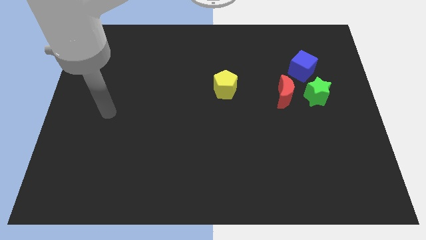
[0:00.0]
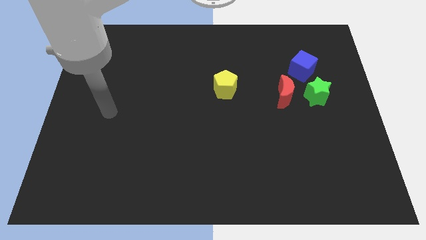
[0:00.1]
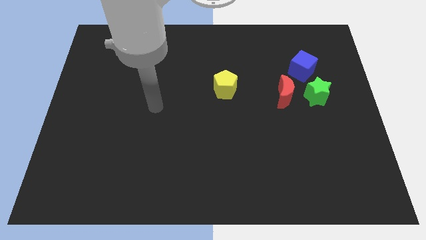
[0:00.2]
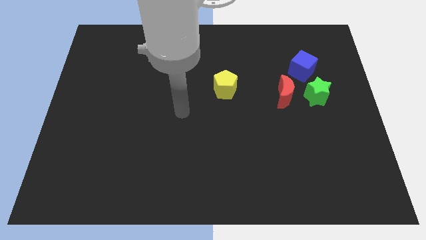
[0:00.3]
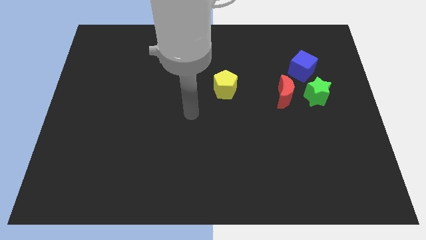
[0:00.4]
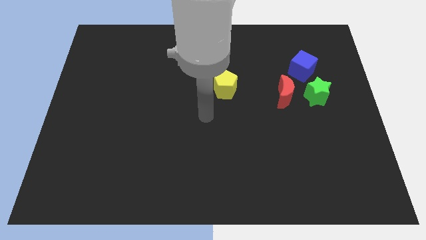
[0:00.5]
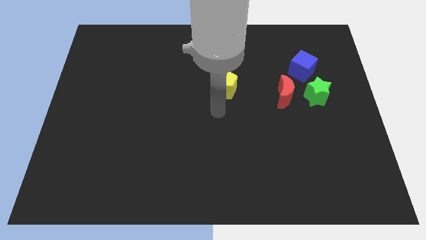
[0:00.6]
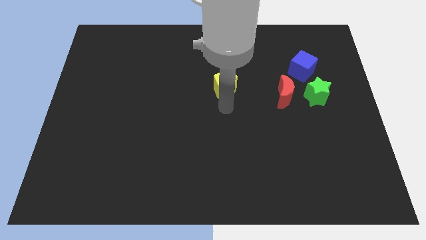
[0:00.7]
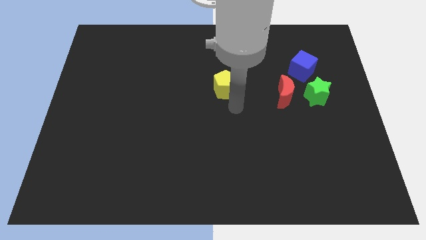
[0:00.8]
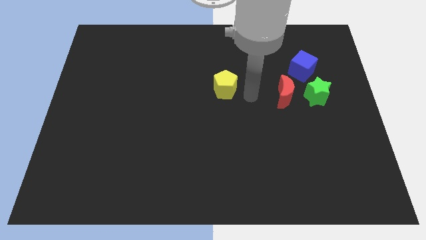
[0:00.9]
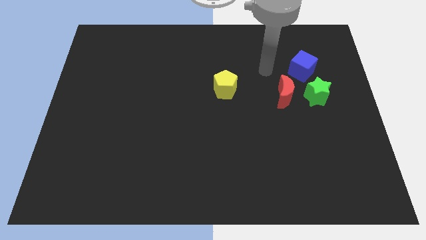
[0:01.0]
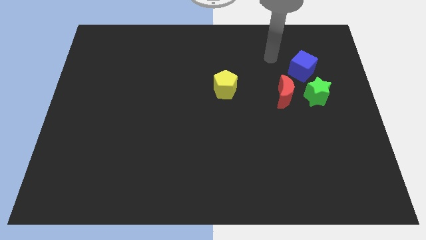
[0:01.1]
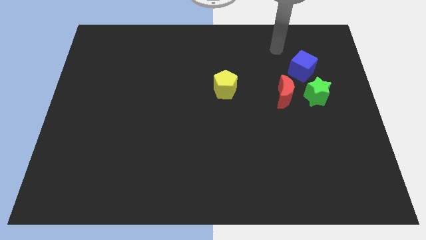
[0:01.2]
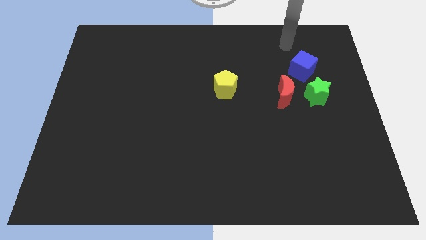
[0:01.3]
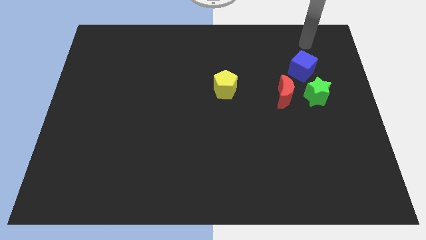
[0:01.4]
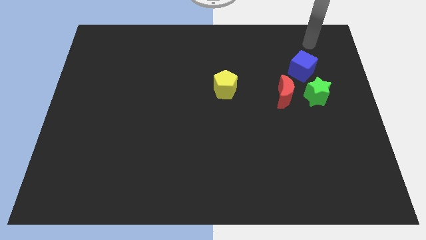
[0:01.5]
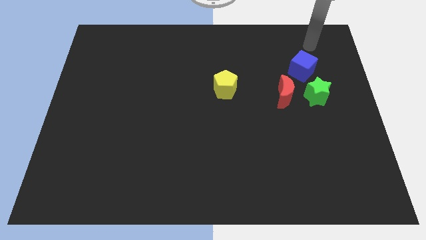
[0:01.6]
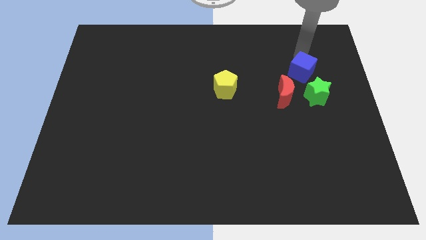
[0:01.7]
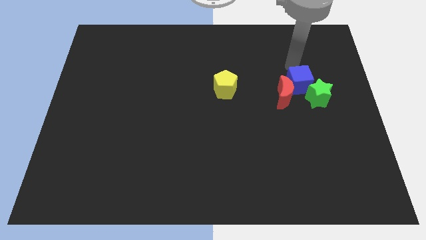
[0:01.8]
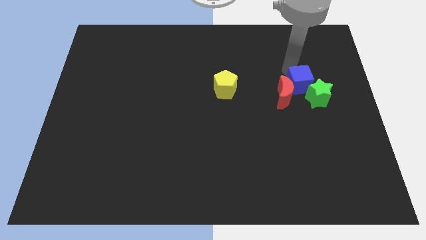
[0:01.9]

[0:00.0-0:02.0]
put the cube to the red moon

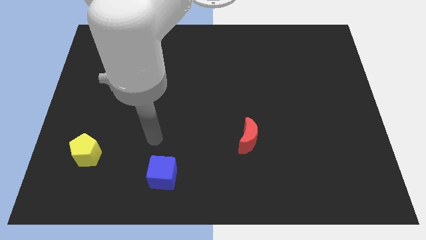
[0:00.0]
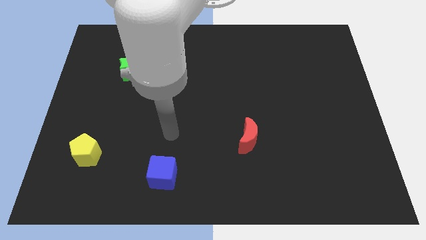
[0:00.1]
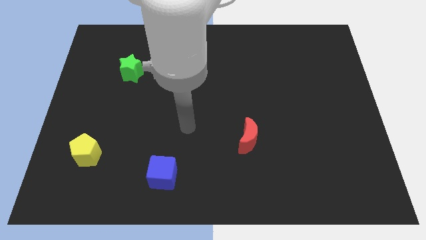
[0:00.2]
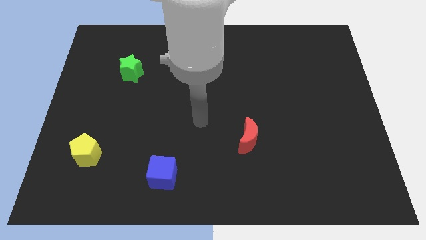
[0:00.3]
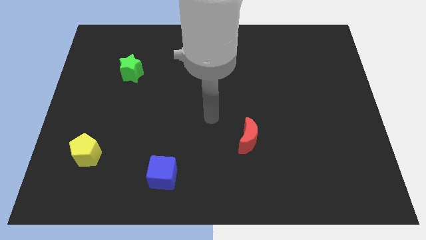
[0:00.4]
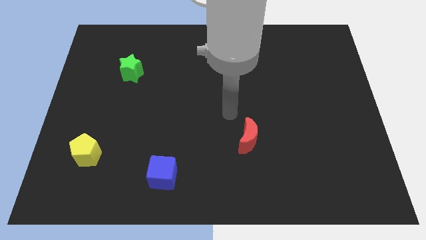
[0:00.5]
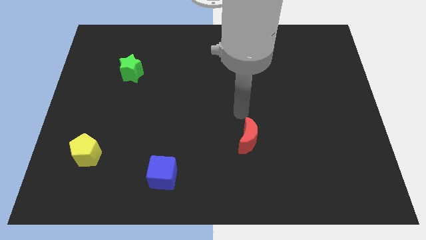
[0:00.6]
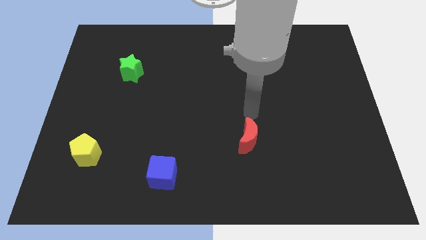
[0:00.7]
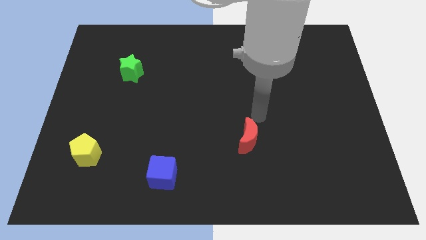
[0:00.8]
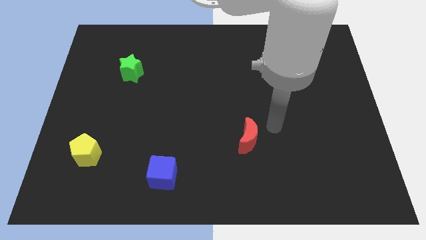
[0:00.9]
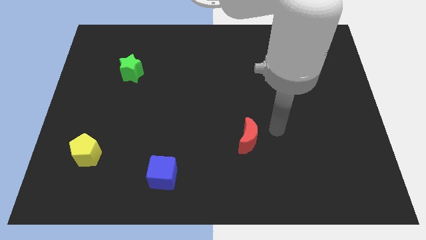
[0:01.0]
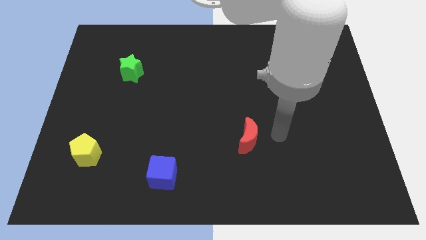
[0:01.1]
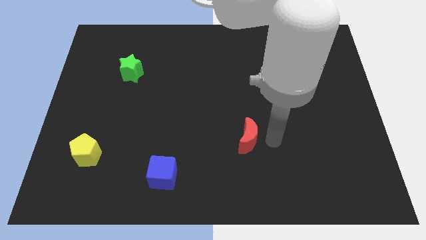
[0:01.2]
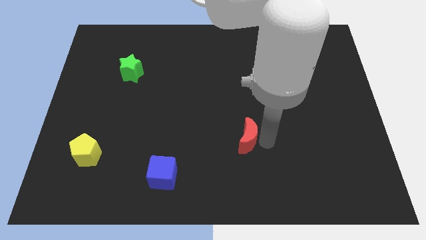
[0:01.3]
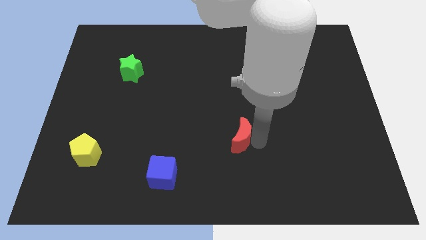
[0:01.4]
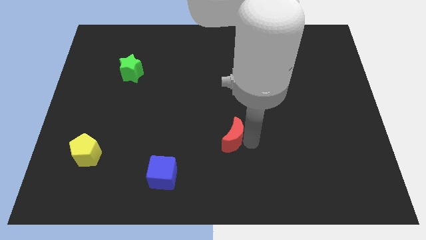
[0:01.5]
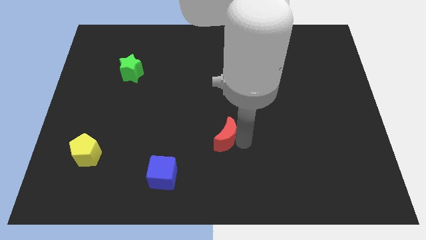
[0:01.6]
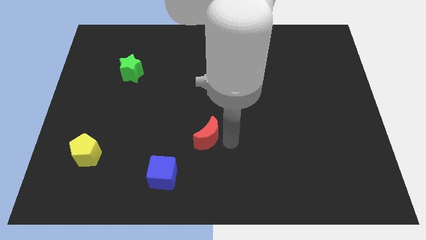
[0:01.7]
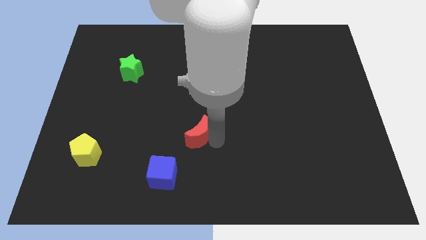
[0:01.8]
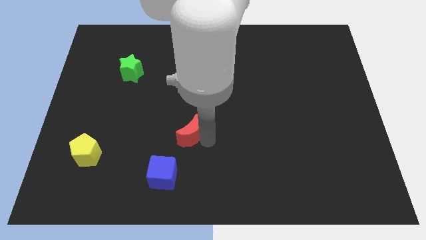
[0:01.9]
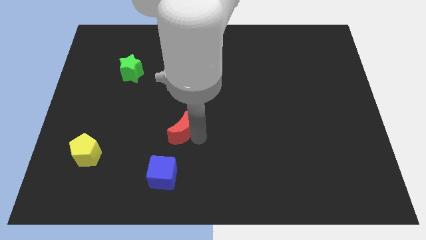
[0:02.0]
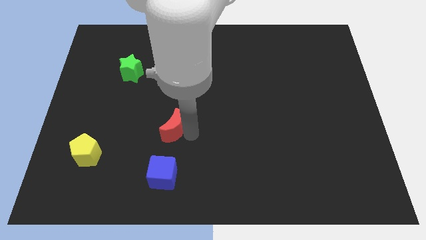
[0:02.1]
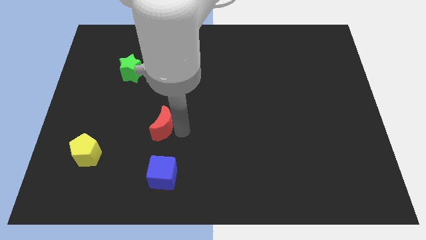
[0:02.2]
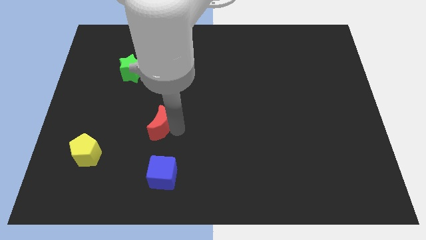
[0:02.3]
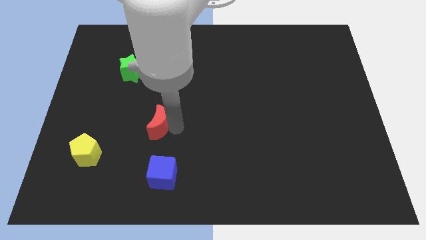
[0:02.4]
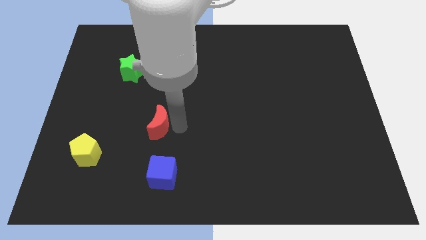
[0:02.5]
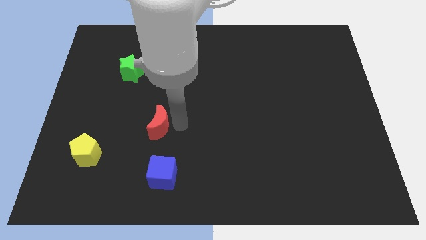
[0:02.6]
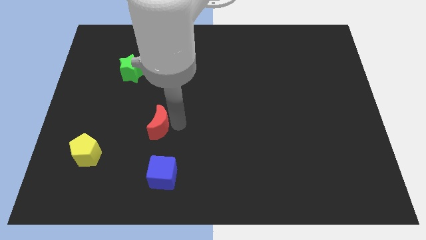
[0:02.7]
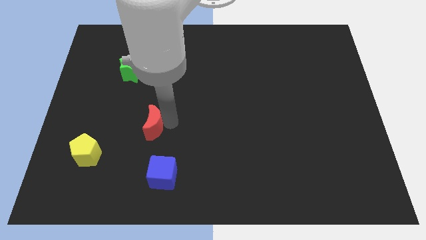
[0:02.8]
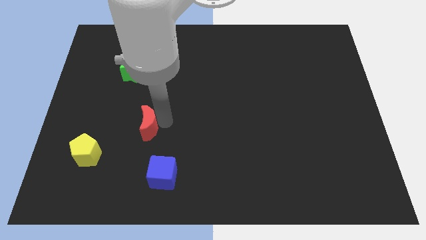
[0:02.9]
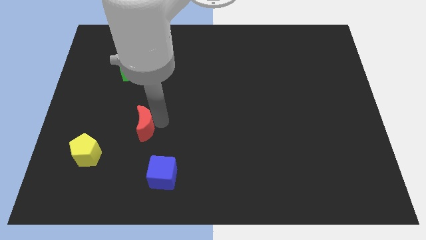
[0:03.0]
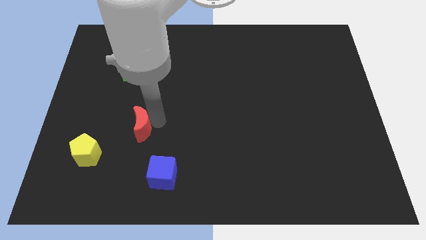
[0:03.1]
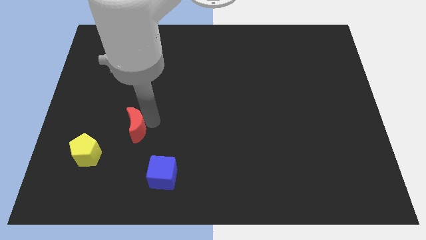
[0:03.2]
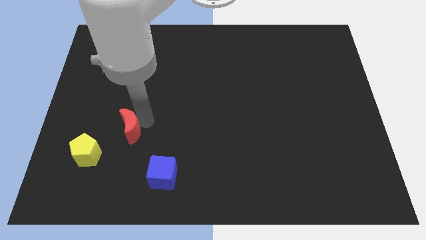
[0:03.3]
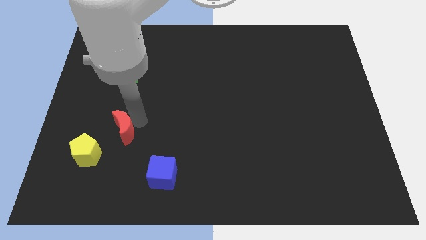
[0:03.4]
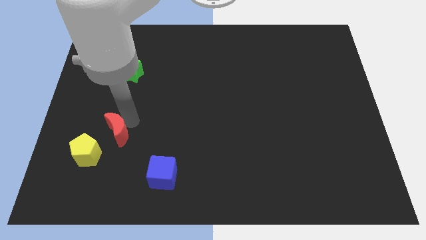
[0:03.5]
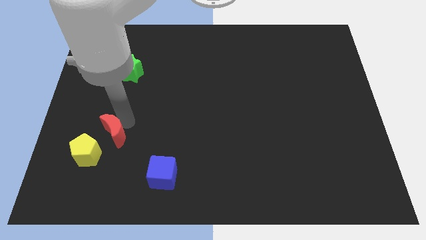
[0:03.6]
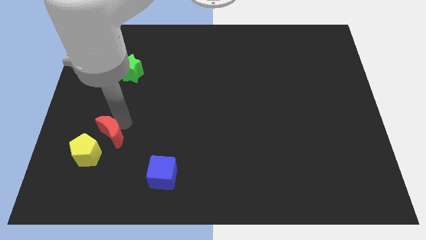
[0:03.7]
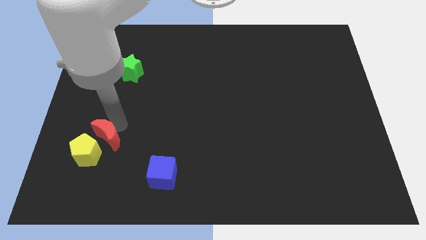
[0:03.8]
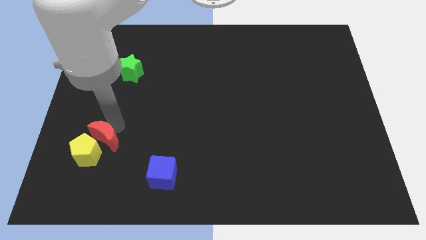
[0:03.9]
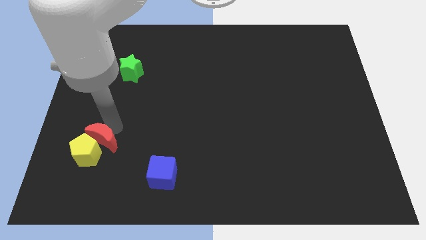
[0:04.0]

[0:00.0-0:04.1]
move the red moon towards the yellow block

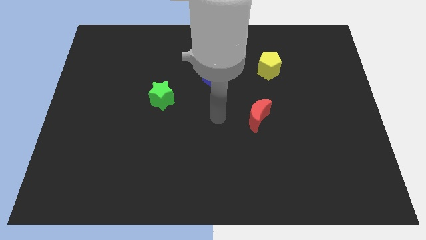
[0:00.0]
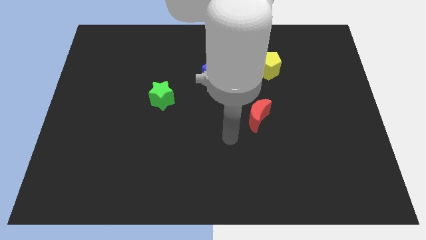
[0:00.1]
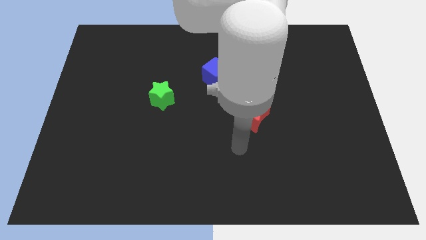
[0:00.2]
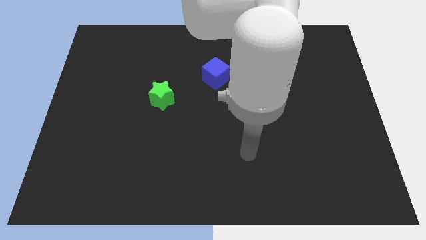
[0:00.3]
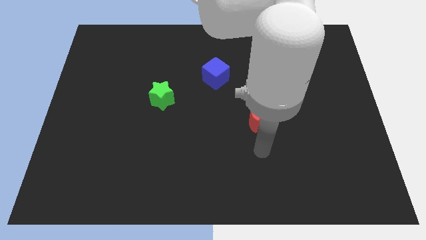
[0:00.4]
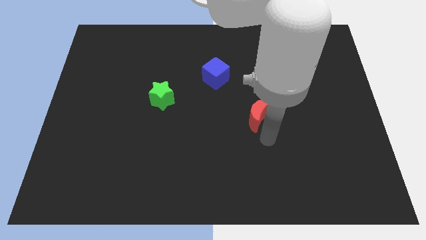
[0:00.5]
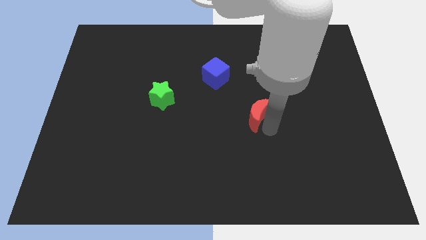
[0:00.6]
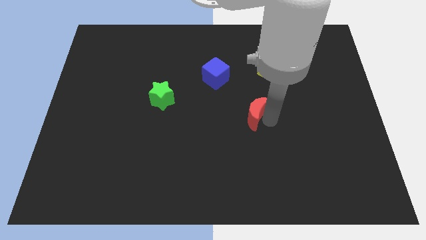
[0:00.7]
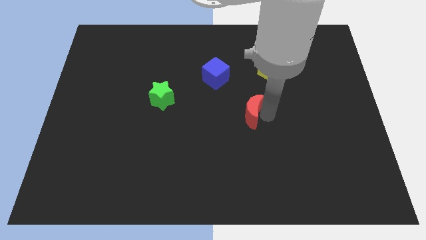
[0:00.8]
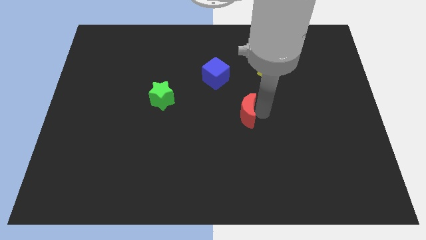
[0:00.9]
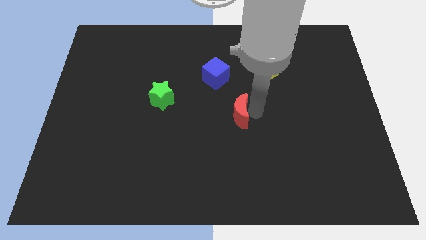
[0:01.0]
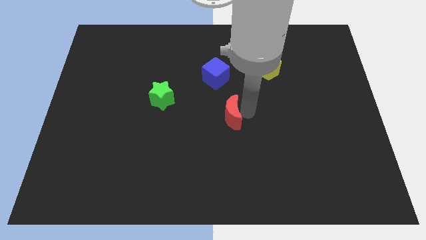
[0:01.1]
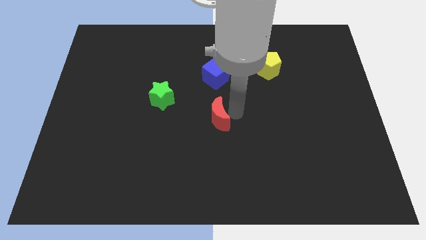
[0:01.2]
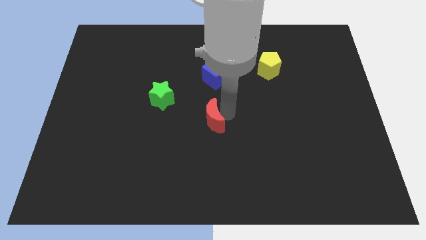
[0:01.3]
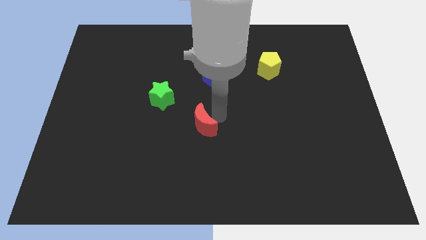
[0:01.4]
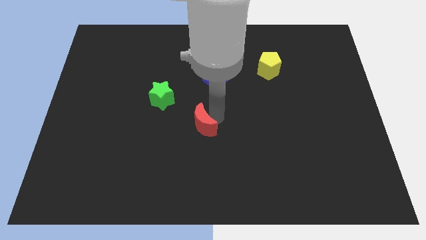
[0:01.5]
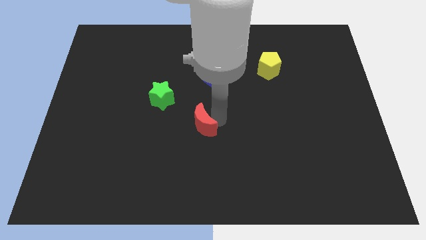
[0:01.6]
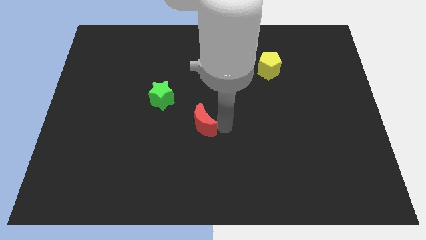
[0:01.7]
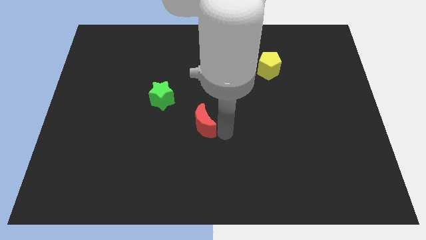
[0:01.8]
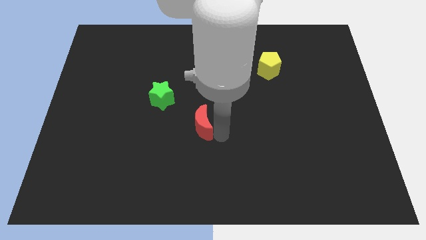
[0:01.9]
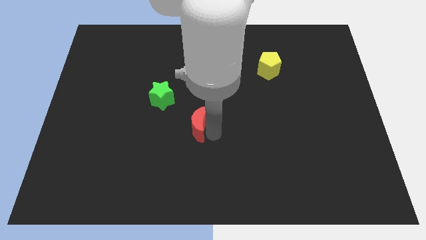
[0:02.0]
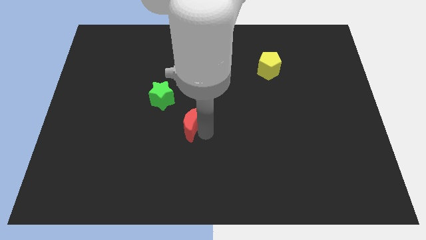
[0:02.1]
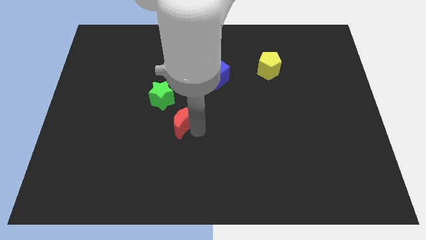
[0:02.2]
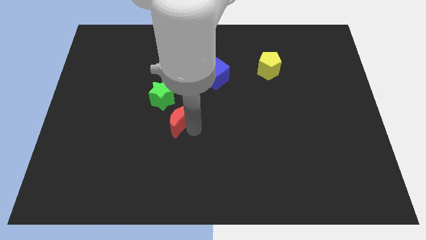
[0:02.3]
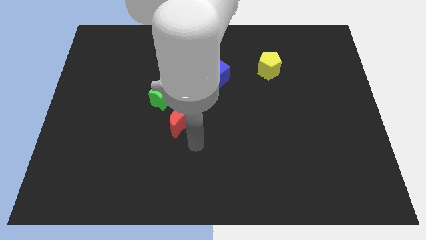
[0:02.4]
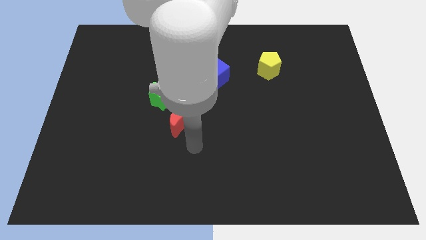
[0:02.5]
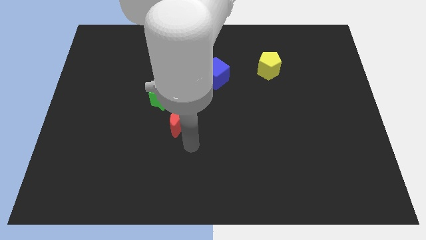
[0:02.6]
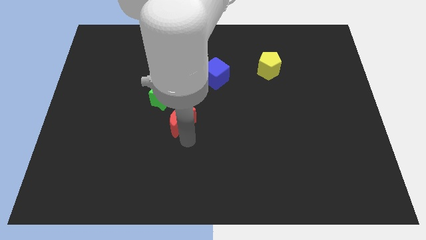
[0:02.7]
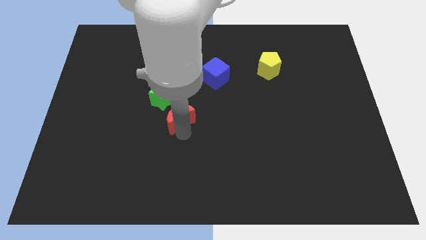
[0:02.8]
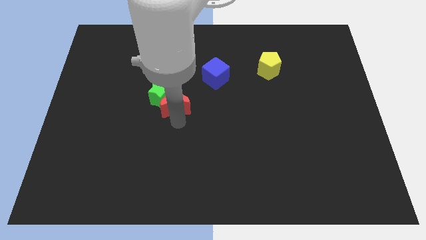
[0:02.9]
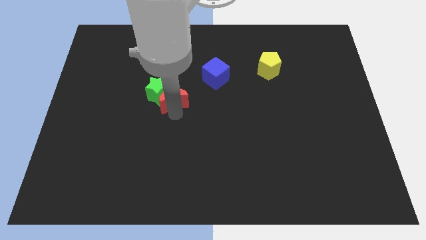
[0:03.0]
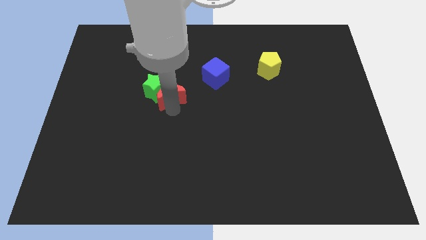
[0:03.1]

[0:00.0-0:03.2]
push the red block to the green block
